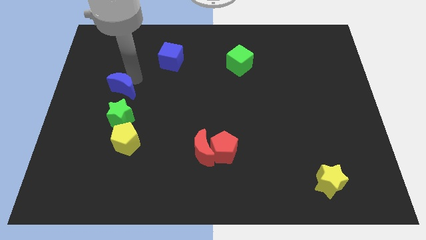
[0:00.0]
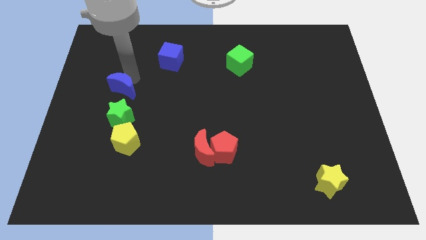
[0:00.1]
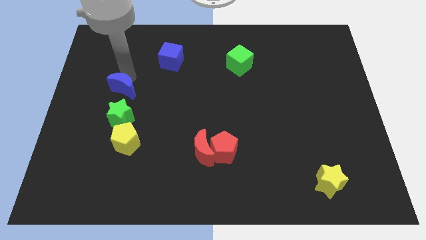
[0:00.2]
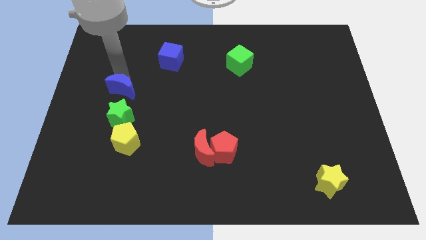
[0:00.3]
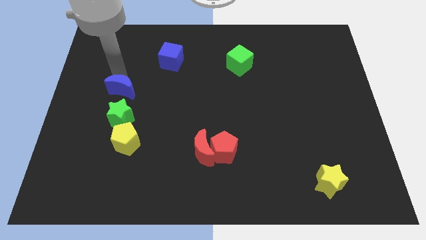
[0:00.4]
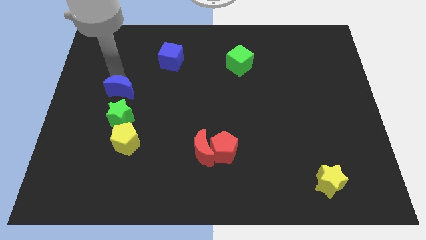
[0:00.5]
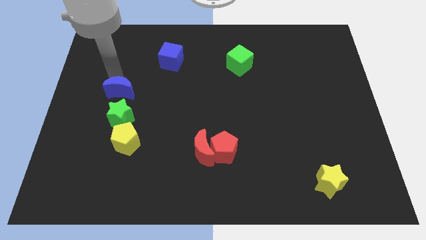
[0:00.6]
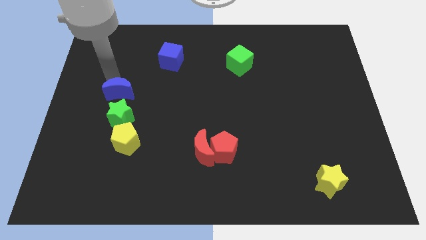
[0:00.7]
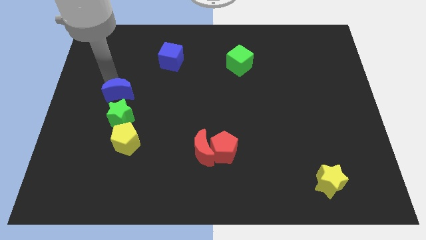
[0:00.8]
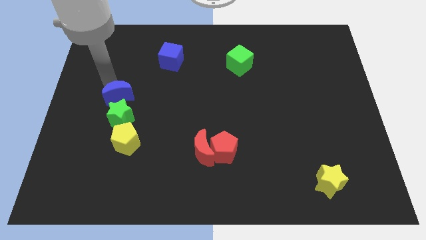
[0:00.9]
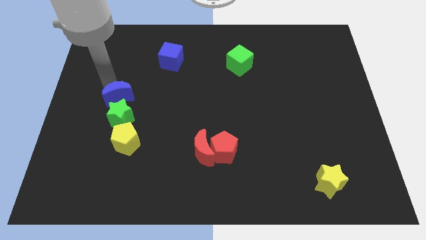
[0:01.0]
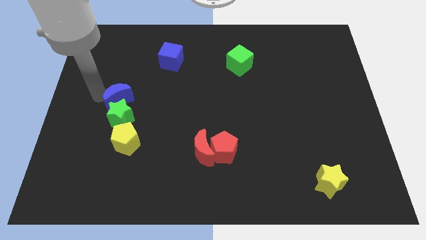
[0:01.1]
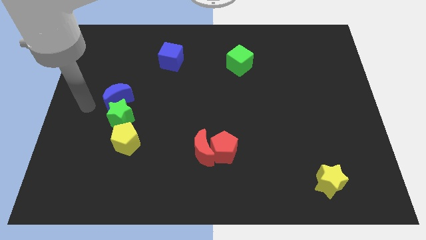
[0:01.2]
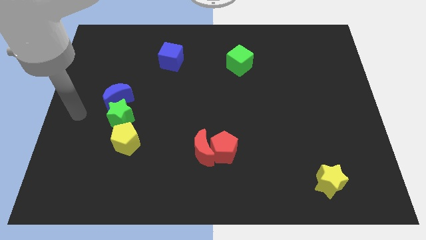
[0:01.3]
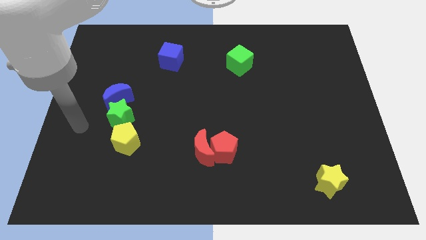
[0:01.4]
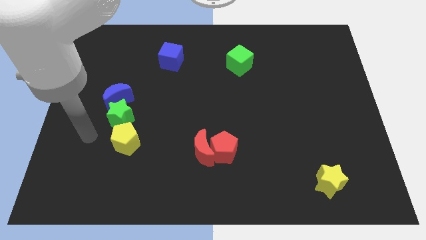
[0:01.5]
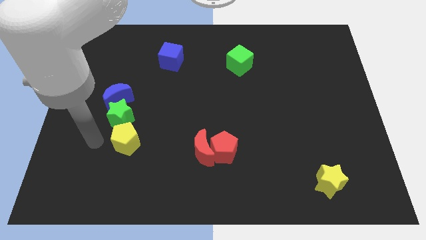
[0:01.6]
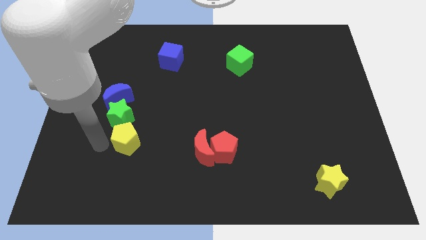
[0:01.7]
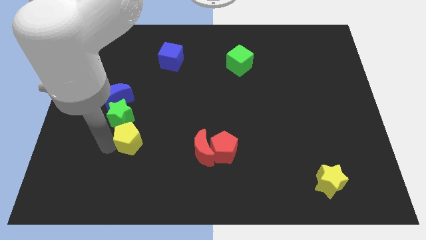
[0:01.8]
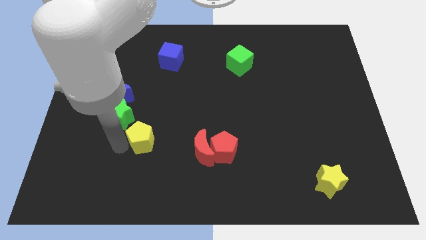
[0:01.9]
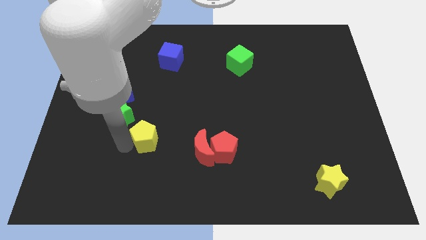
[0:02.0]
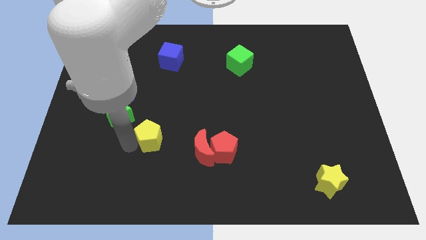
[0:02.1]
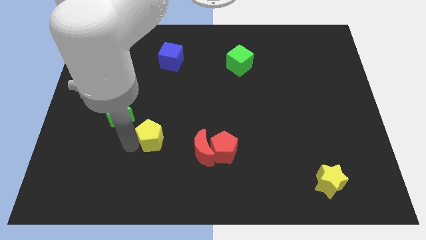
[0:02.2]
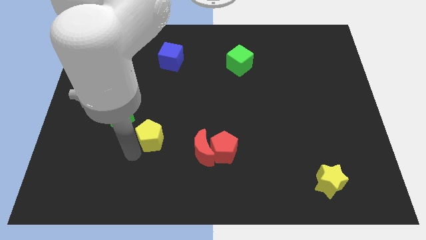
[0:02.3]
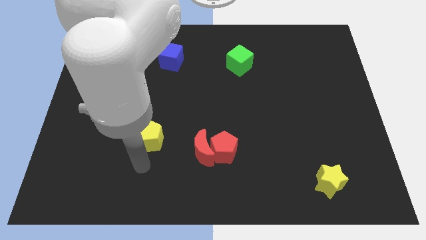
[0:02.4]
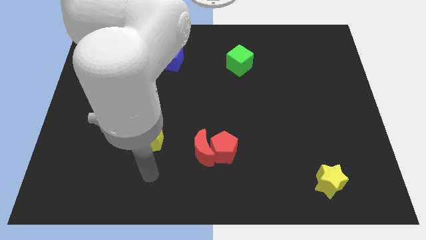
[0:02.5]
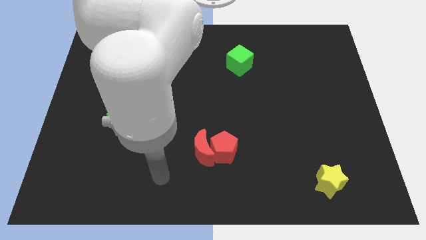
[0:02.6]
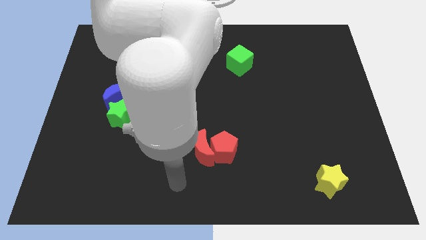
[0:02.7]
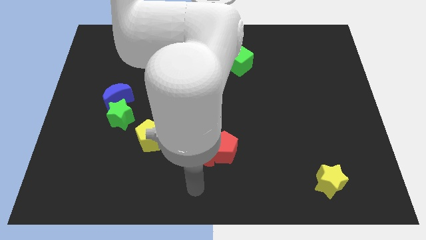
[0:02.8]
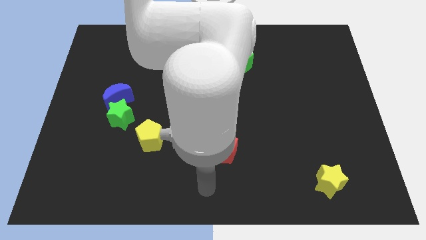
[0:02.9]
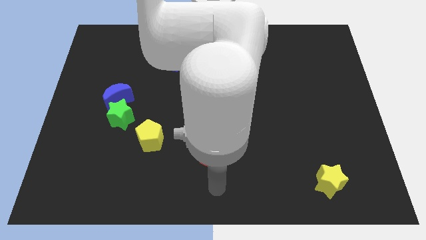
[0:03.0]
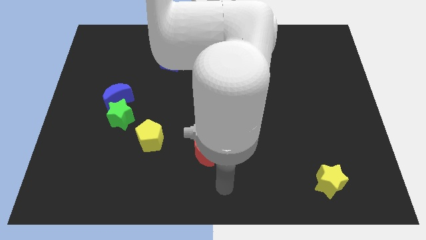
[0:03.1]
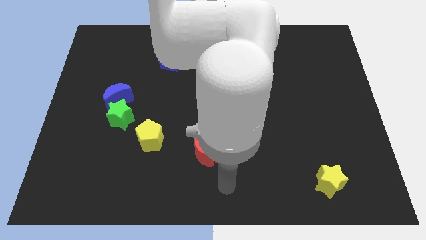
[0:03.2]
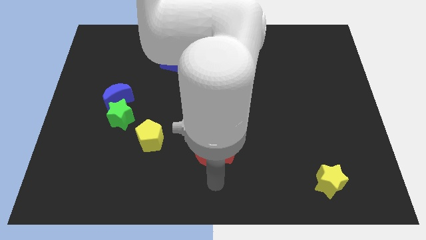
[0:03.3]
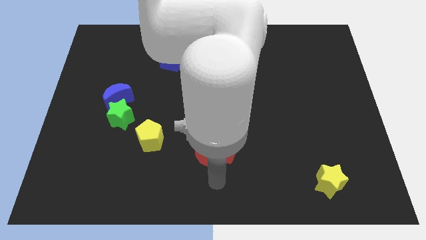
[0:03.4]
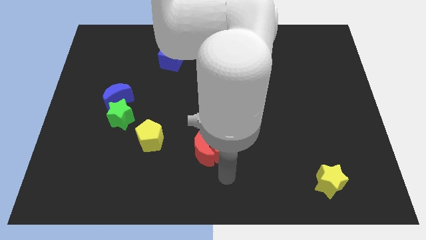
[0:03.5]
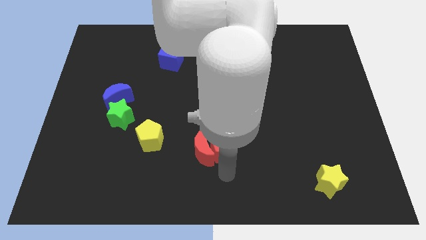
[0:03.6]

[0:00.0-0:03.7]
slide the yellow pentagon towards the top center of the board

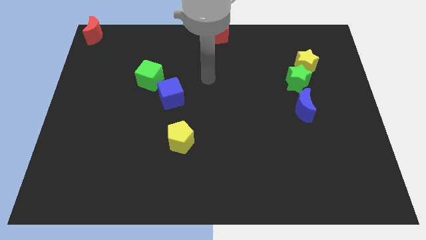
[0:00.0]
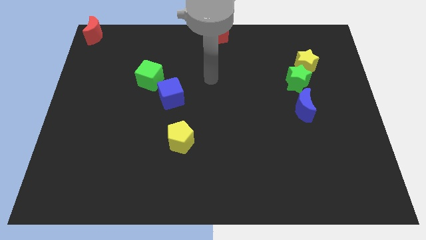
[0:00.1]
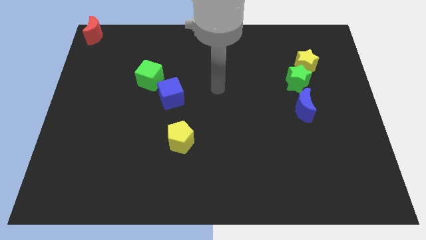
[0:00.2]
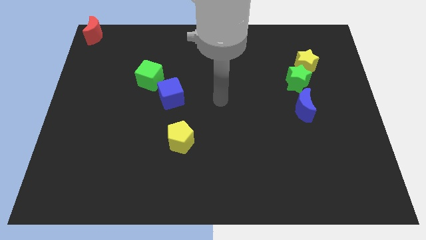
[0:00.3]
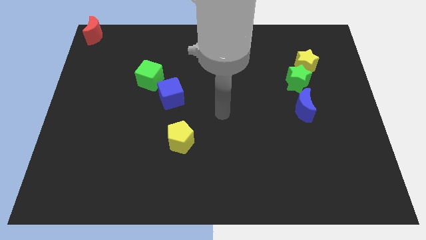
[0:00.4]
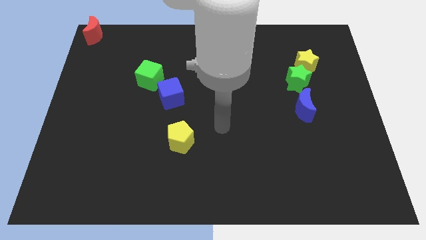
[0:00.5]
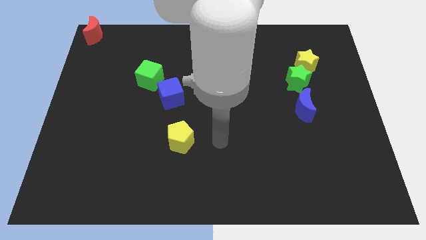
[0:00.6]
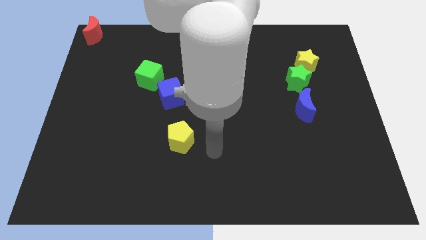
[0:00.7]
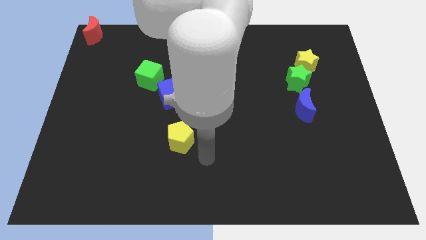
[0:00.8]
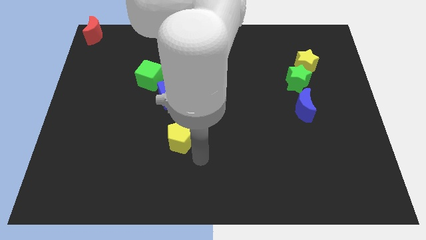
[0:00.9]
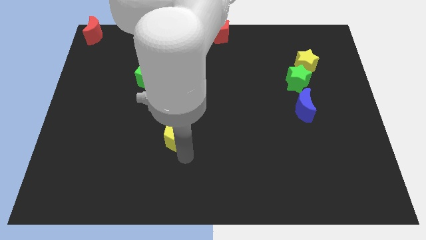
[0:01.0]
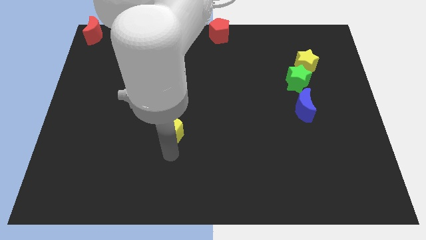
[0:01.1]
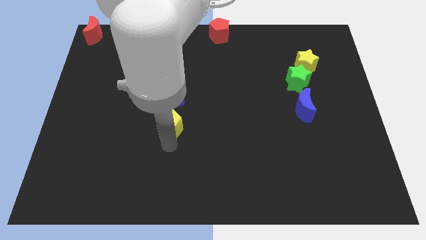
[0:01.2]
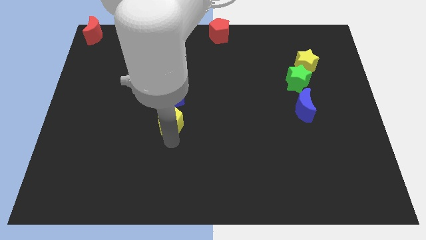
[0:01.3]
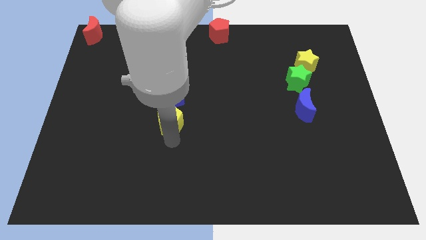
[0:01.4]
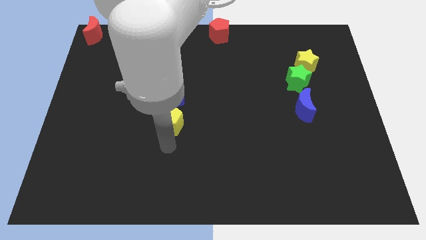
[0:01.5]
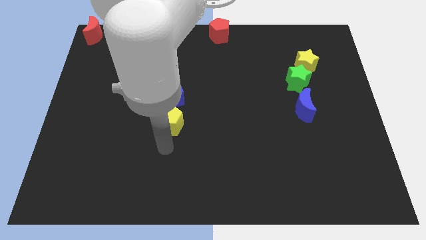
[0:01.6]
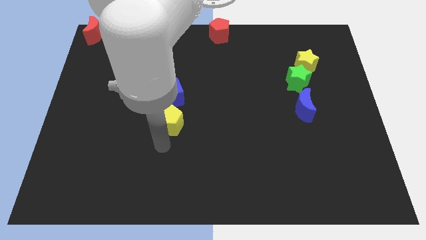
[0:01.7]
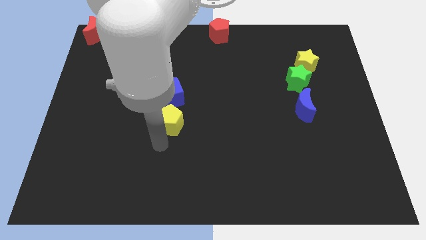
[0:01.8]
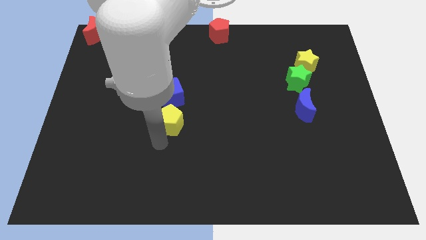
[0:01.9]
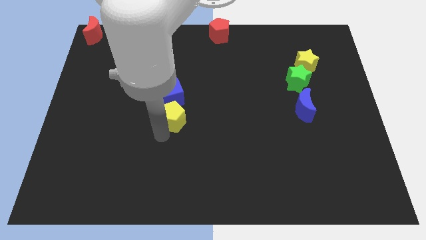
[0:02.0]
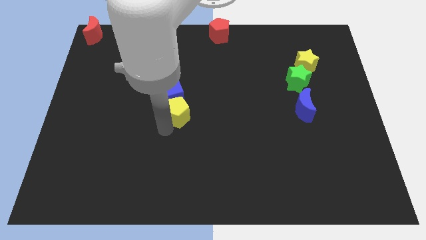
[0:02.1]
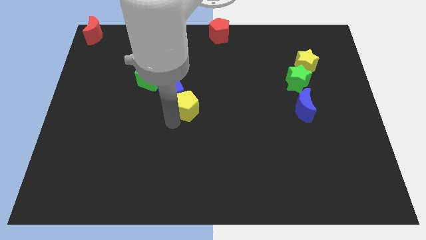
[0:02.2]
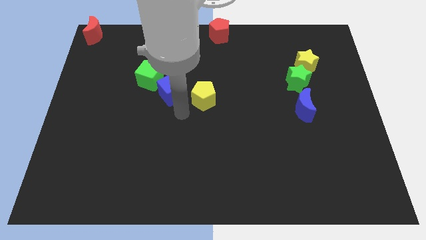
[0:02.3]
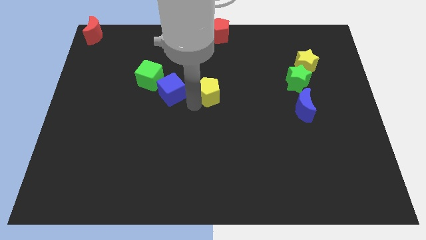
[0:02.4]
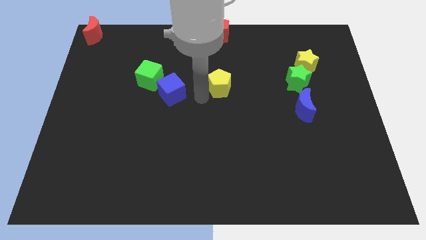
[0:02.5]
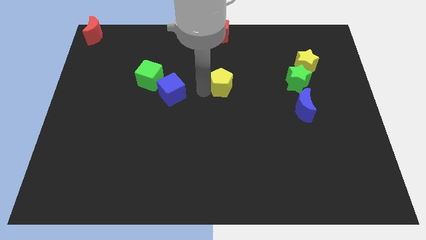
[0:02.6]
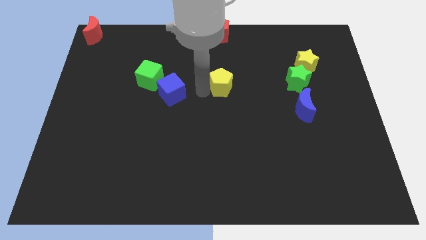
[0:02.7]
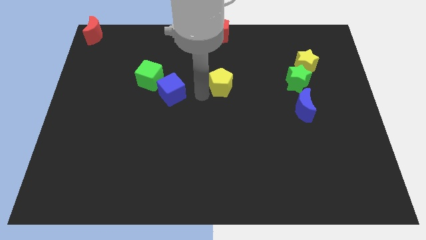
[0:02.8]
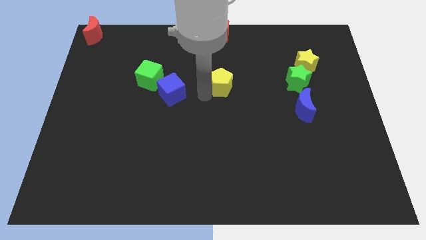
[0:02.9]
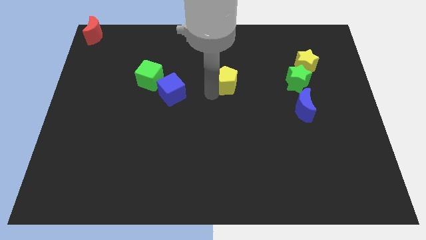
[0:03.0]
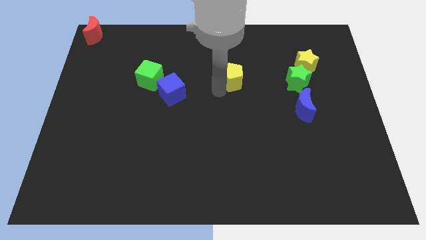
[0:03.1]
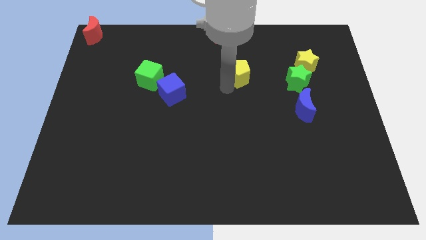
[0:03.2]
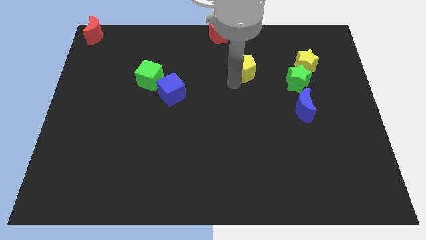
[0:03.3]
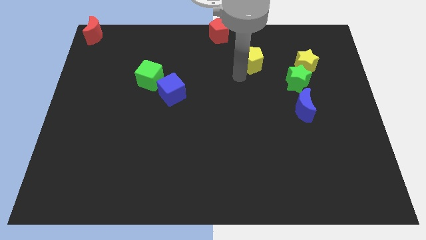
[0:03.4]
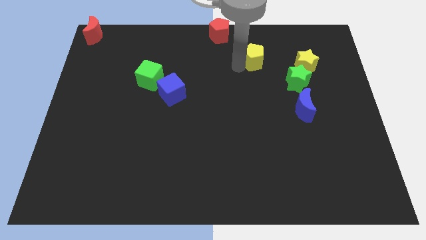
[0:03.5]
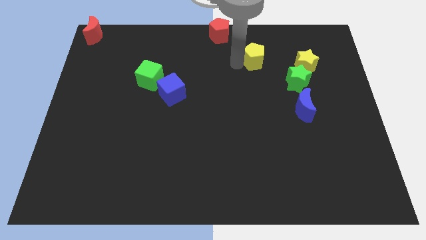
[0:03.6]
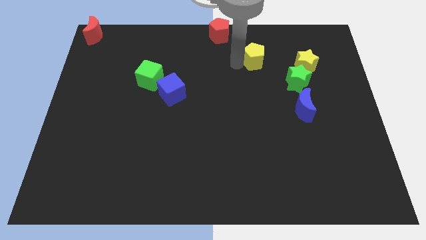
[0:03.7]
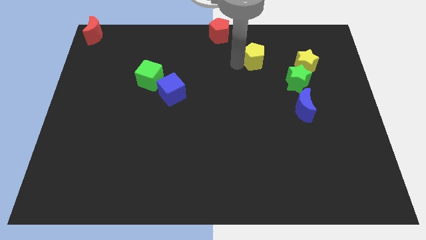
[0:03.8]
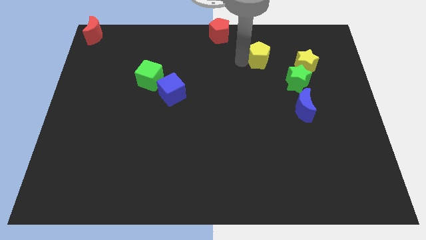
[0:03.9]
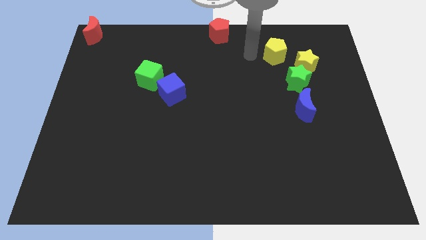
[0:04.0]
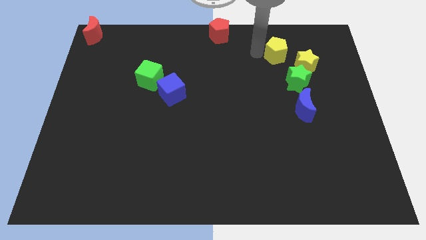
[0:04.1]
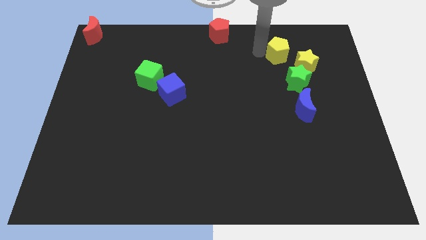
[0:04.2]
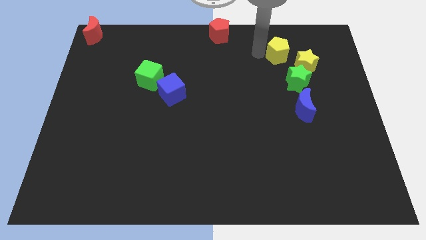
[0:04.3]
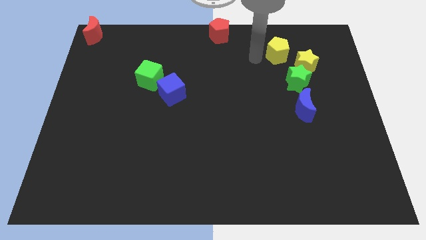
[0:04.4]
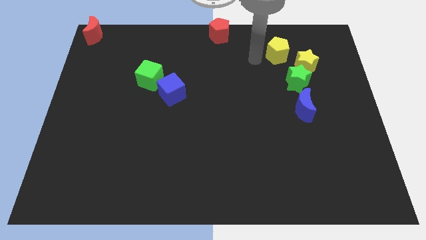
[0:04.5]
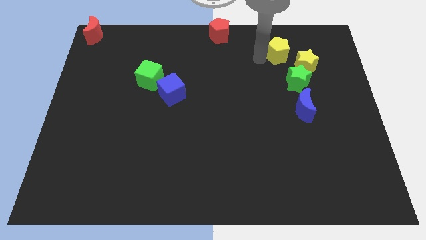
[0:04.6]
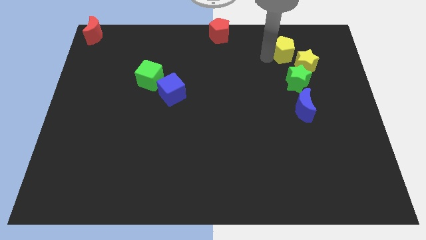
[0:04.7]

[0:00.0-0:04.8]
push the yellow pentagon close to the yellow star

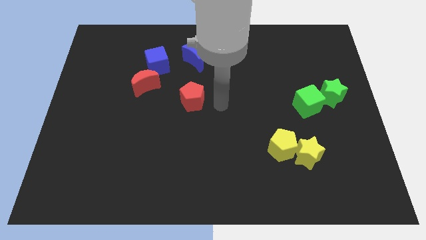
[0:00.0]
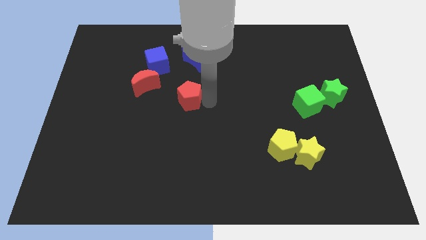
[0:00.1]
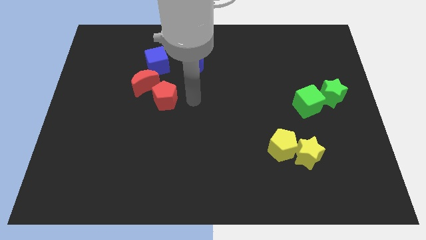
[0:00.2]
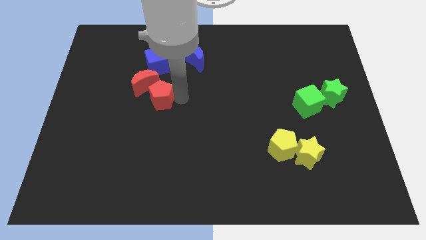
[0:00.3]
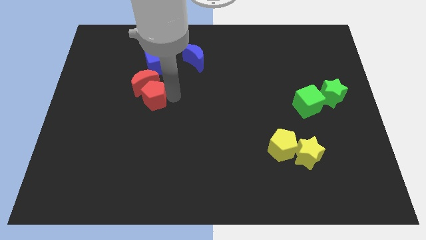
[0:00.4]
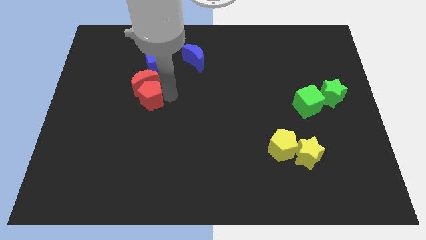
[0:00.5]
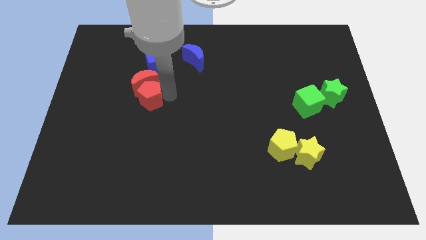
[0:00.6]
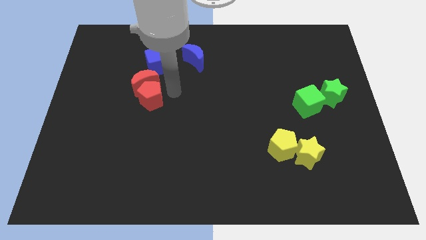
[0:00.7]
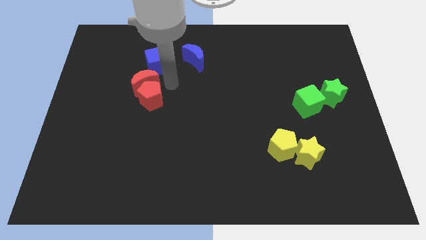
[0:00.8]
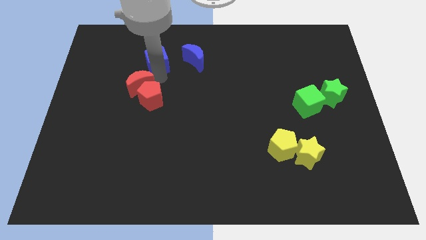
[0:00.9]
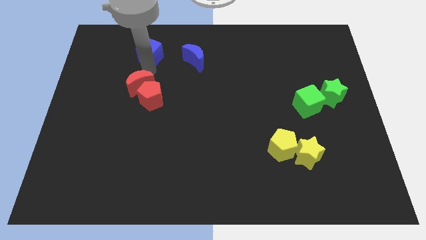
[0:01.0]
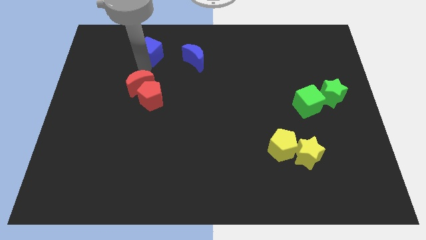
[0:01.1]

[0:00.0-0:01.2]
push red pentagon below the red moon
